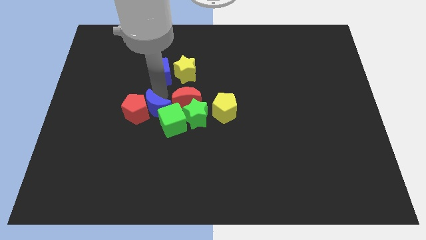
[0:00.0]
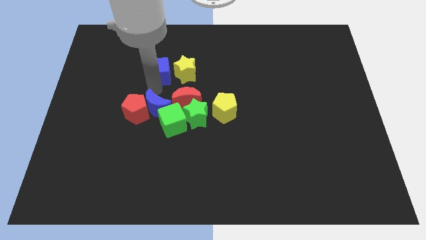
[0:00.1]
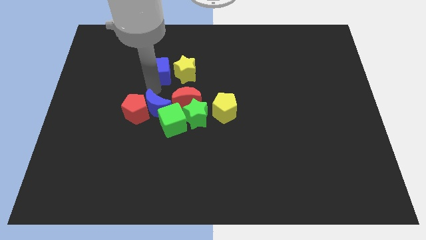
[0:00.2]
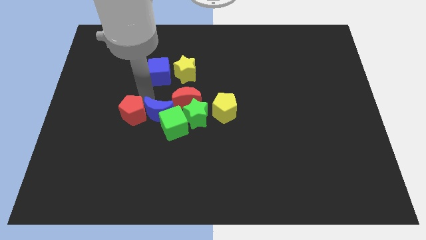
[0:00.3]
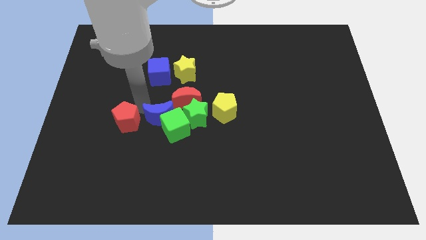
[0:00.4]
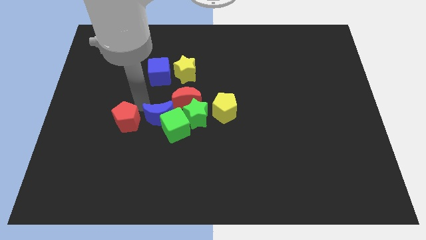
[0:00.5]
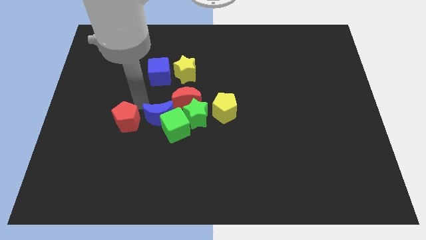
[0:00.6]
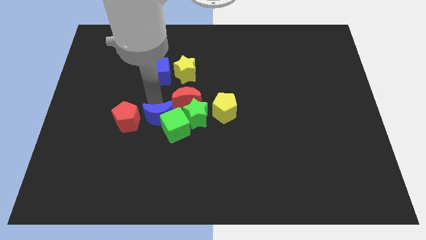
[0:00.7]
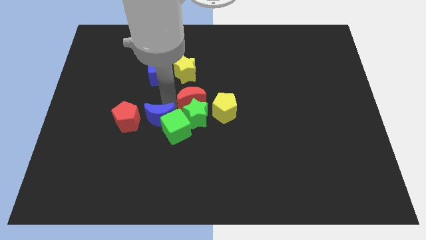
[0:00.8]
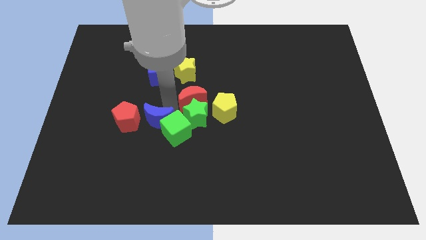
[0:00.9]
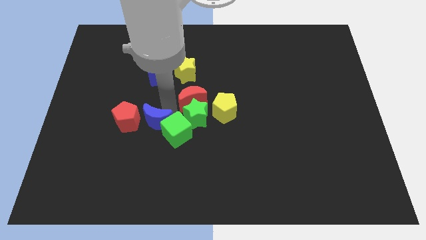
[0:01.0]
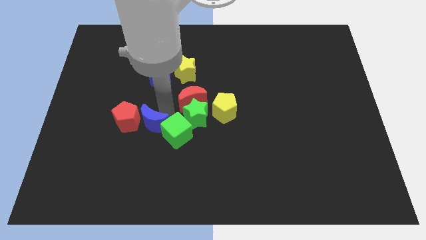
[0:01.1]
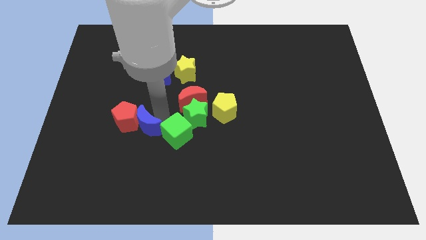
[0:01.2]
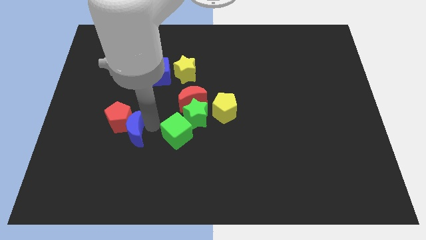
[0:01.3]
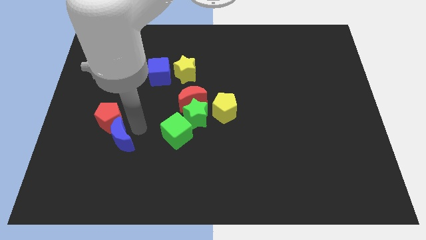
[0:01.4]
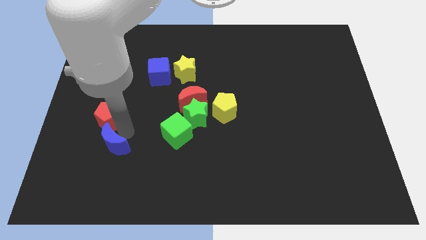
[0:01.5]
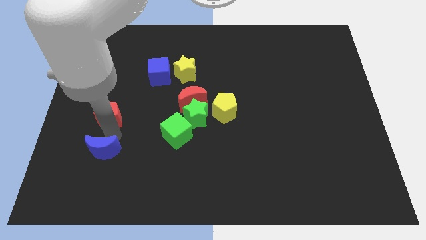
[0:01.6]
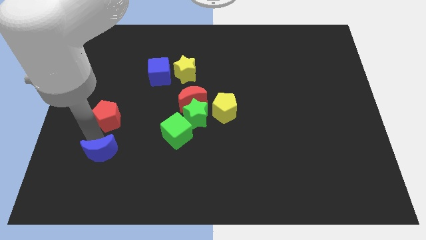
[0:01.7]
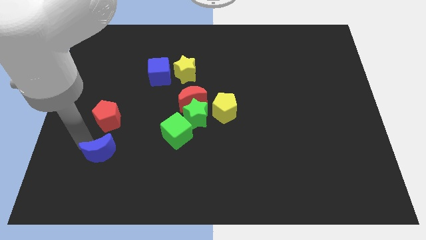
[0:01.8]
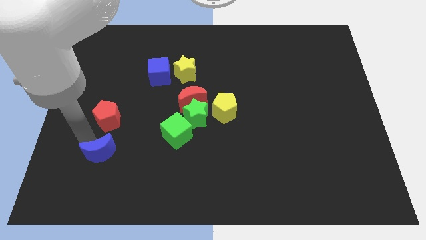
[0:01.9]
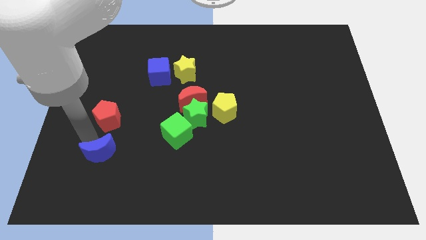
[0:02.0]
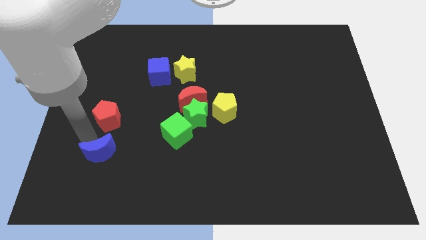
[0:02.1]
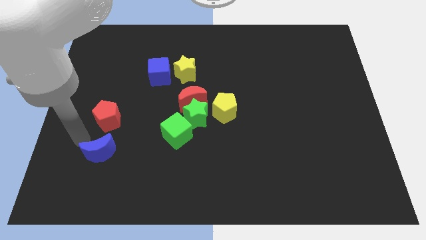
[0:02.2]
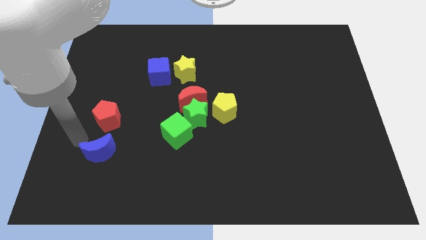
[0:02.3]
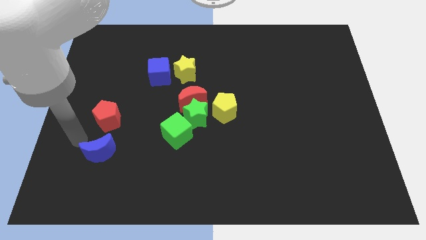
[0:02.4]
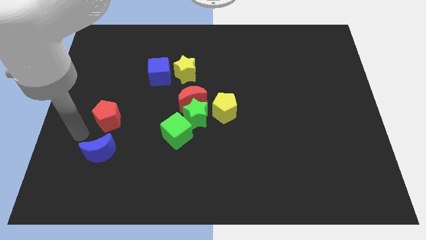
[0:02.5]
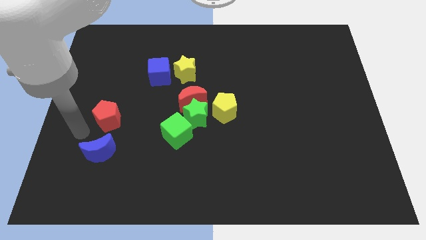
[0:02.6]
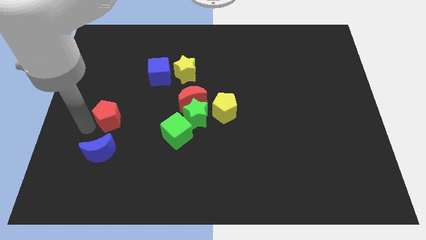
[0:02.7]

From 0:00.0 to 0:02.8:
separate the blue moon and red pentagon from group of blocks

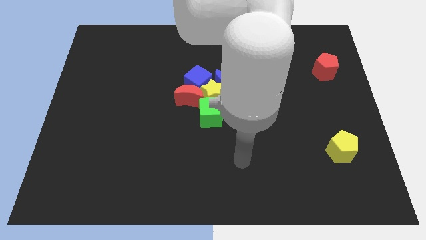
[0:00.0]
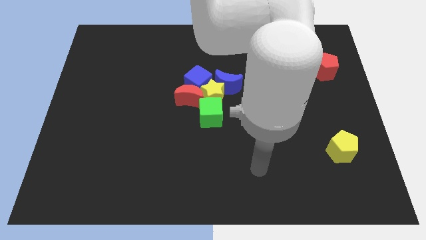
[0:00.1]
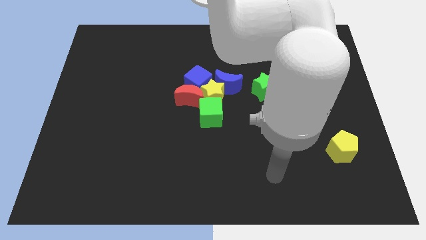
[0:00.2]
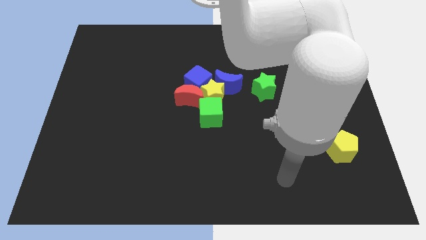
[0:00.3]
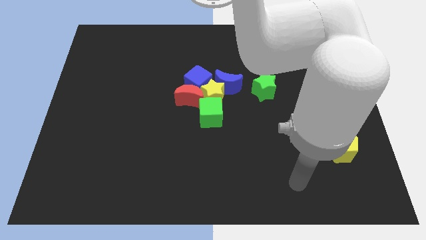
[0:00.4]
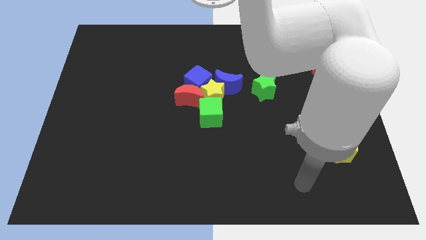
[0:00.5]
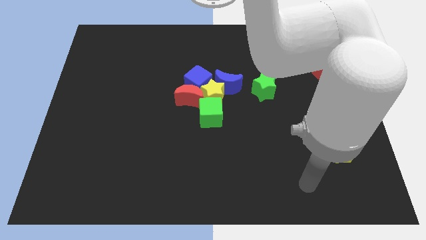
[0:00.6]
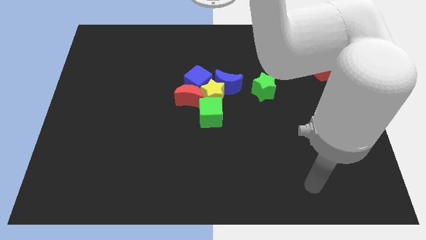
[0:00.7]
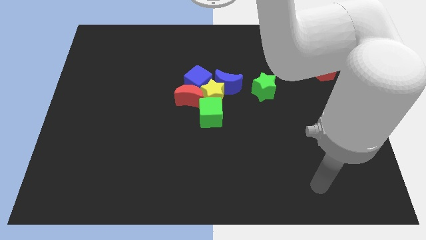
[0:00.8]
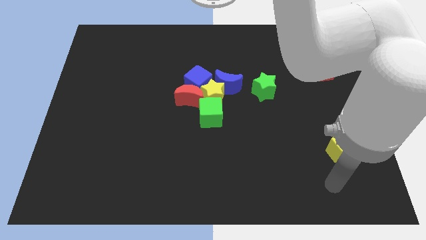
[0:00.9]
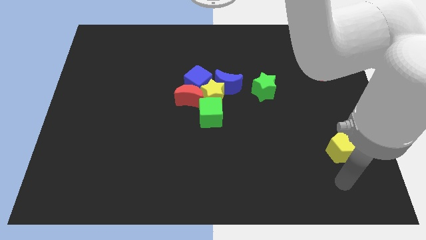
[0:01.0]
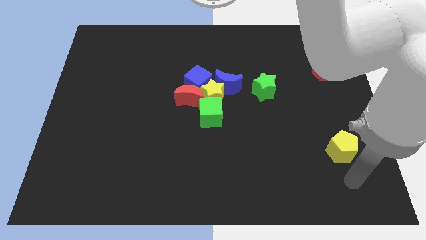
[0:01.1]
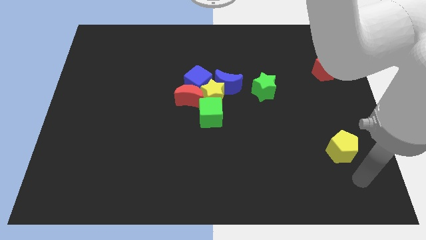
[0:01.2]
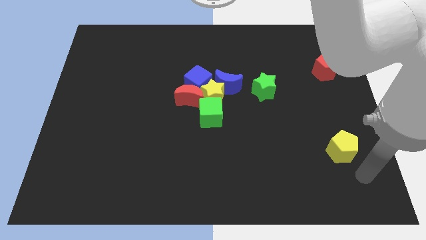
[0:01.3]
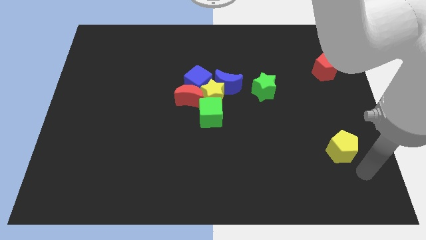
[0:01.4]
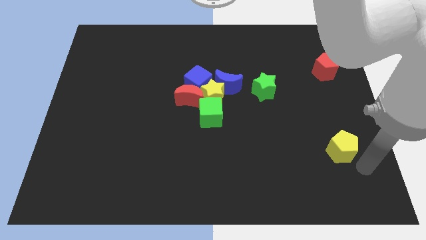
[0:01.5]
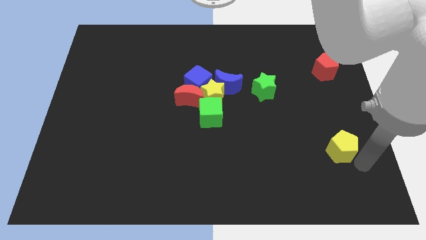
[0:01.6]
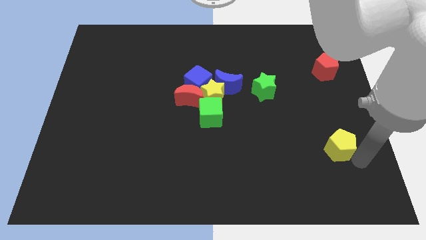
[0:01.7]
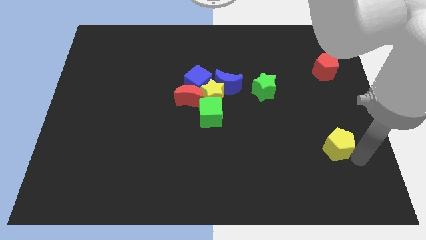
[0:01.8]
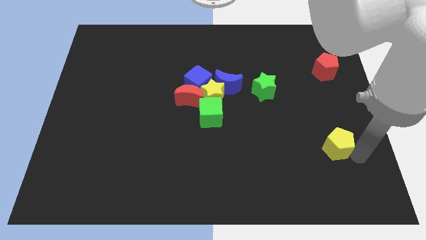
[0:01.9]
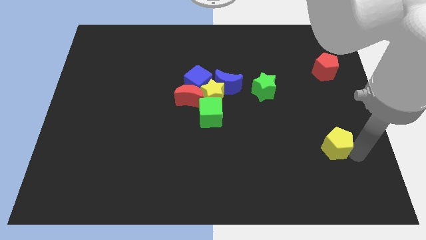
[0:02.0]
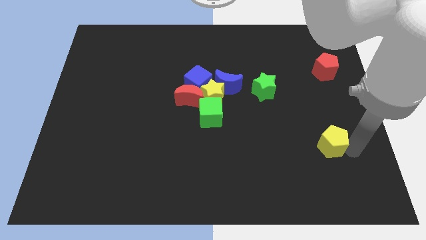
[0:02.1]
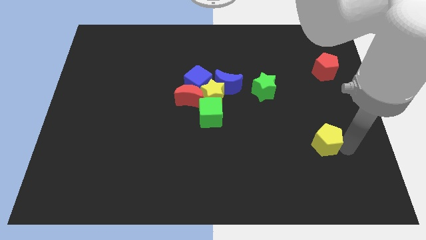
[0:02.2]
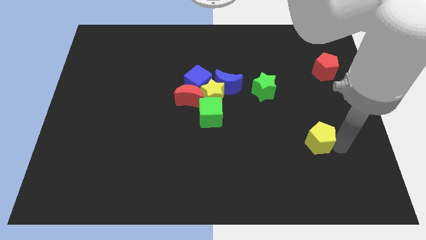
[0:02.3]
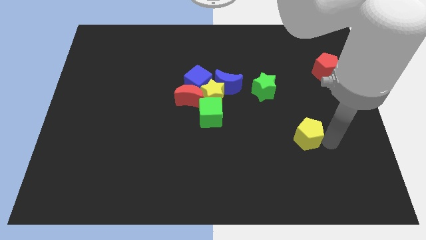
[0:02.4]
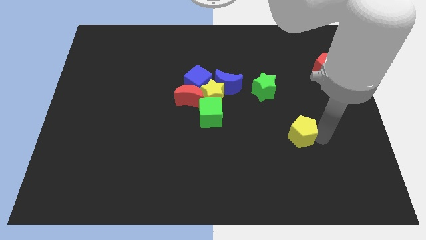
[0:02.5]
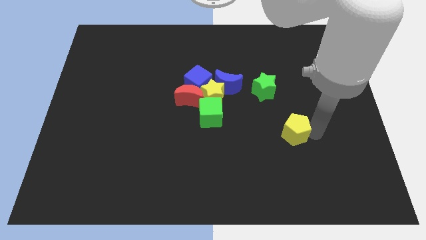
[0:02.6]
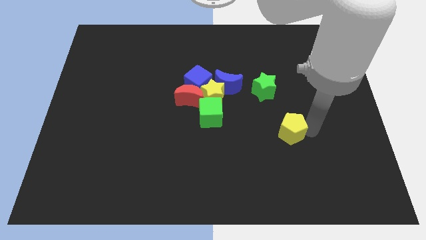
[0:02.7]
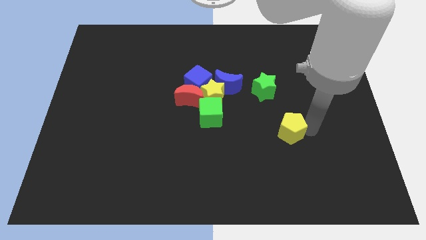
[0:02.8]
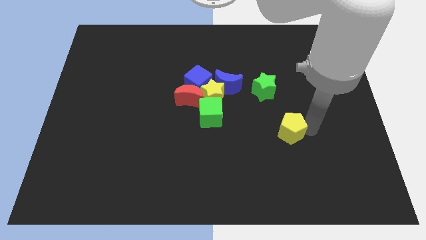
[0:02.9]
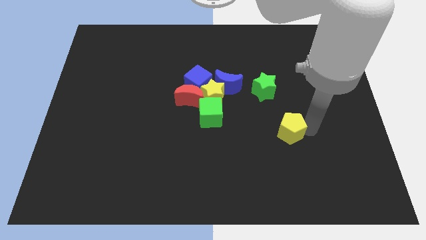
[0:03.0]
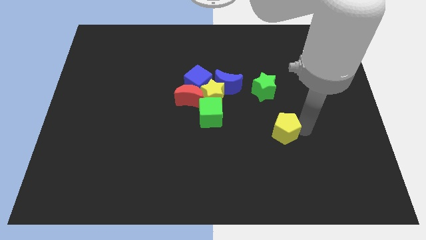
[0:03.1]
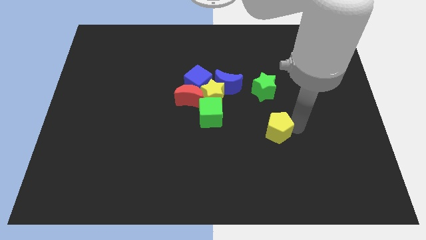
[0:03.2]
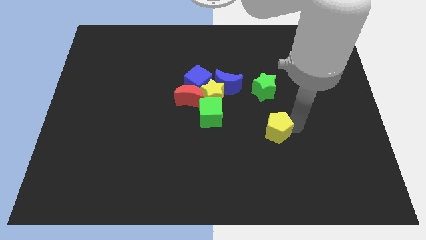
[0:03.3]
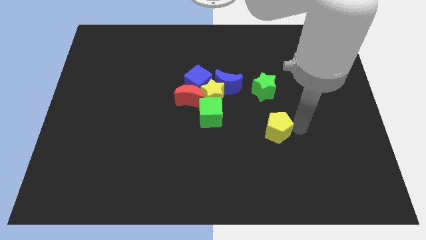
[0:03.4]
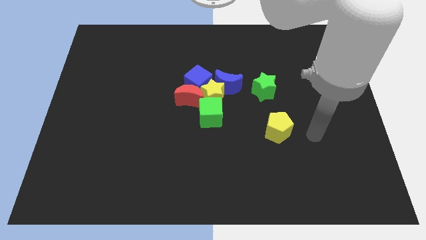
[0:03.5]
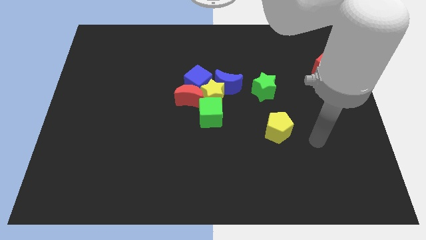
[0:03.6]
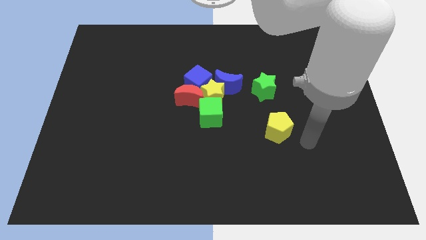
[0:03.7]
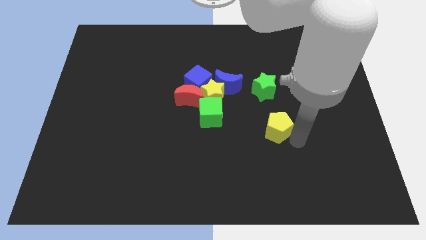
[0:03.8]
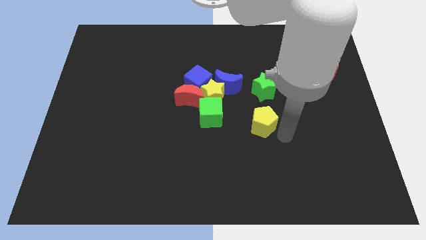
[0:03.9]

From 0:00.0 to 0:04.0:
drag yellow pentagon to the bottom side of the green star

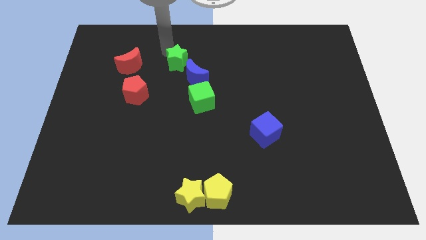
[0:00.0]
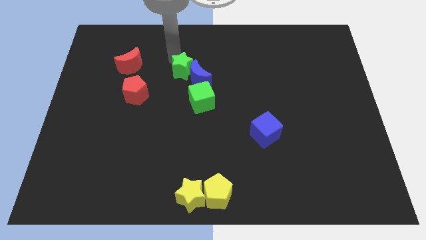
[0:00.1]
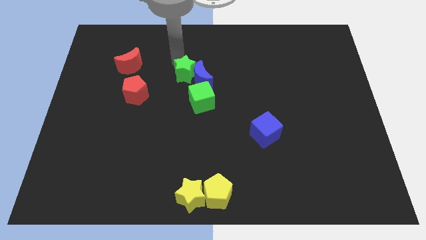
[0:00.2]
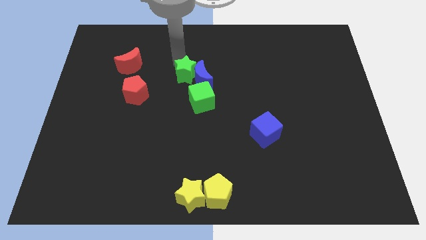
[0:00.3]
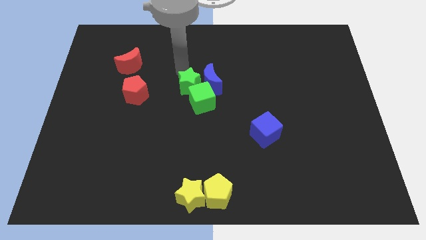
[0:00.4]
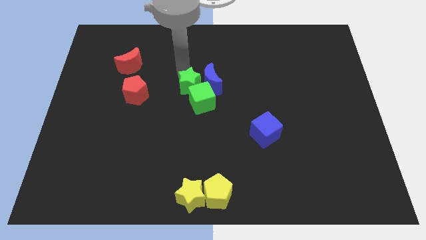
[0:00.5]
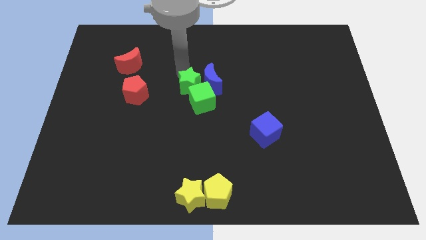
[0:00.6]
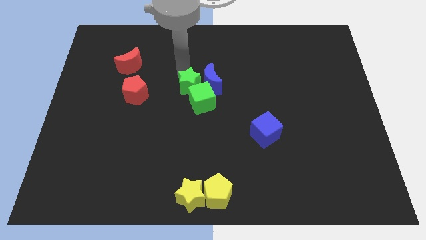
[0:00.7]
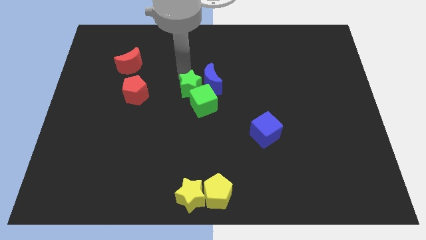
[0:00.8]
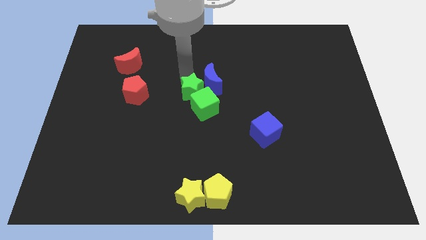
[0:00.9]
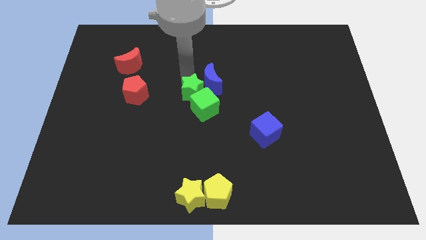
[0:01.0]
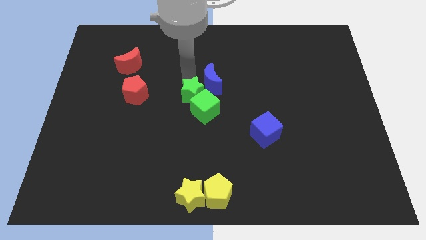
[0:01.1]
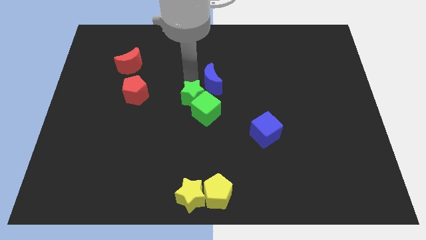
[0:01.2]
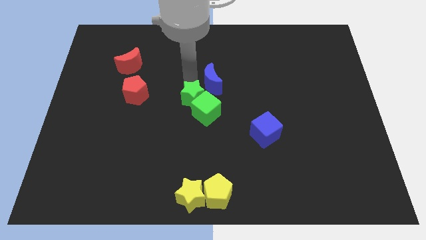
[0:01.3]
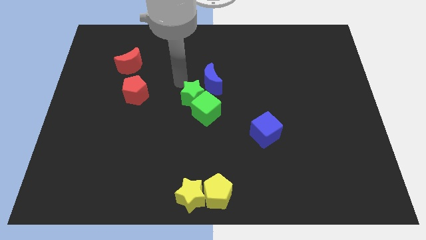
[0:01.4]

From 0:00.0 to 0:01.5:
push green star in to green cube

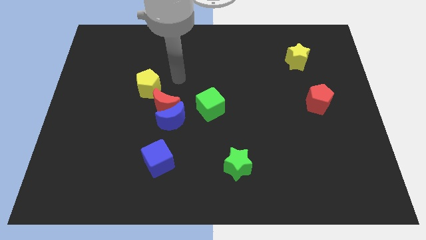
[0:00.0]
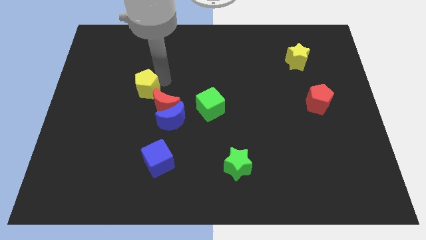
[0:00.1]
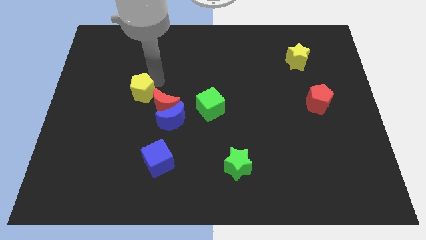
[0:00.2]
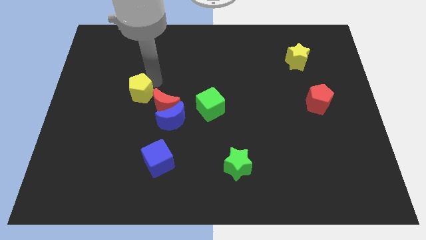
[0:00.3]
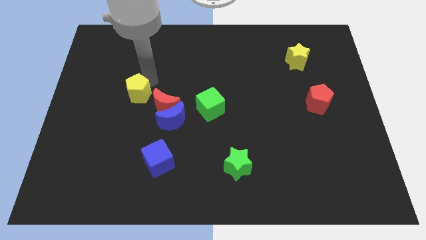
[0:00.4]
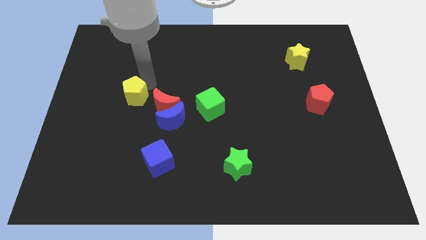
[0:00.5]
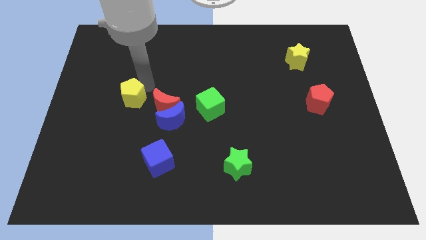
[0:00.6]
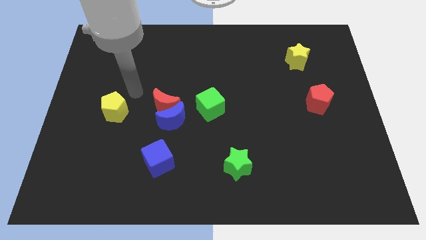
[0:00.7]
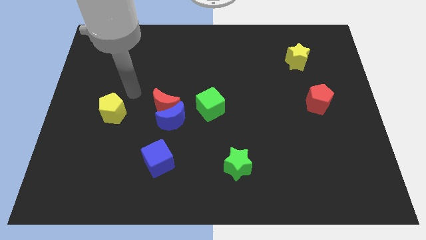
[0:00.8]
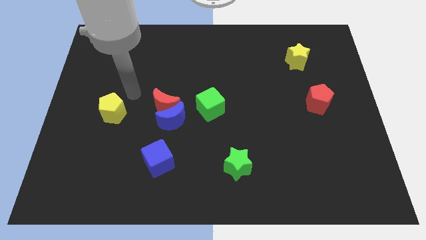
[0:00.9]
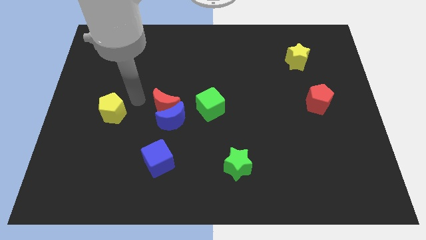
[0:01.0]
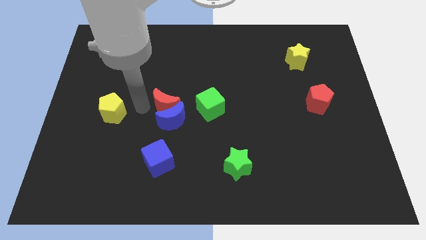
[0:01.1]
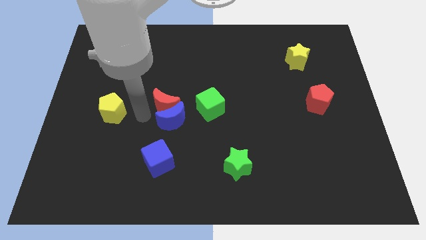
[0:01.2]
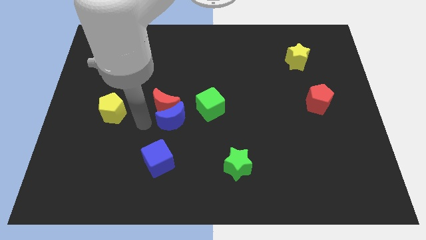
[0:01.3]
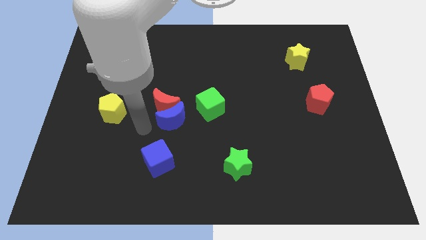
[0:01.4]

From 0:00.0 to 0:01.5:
push yellow pentagon to left
